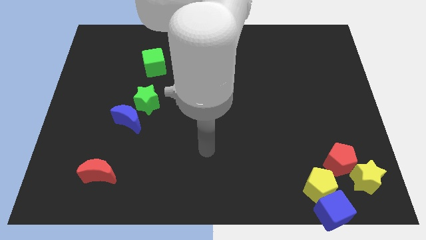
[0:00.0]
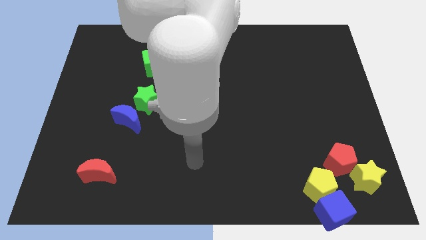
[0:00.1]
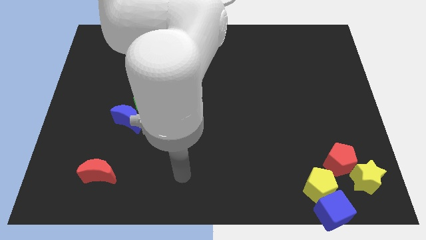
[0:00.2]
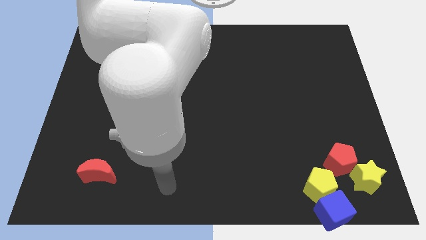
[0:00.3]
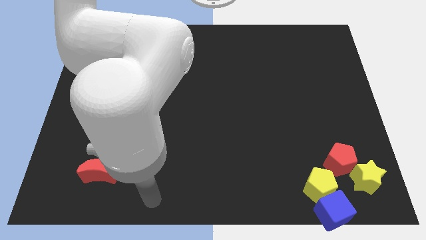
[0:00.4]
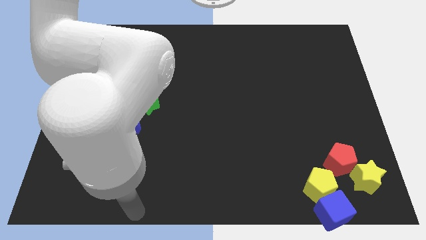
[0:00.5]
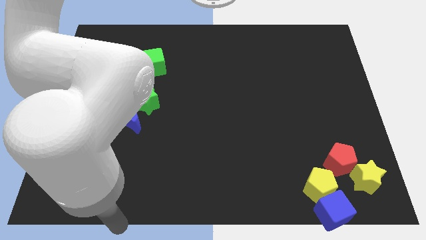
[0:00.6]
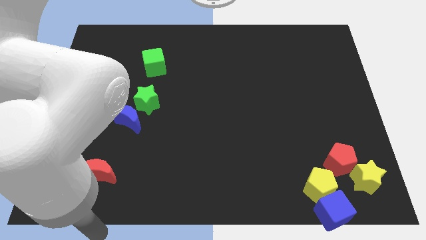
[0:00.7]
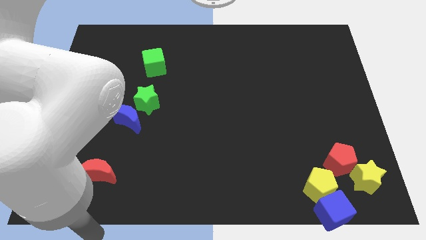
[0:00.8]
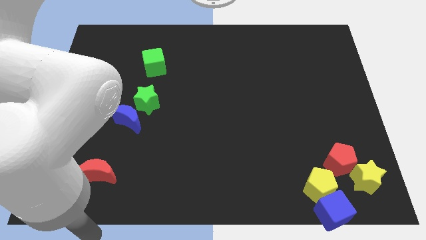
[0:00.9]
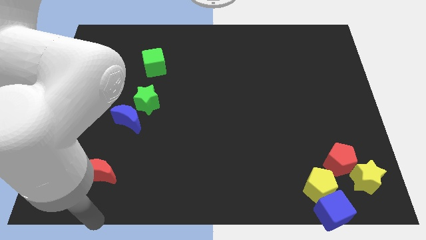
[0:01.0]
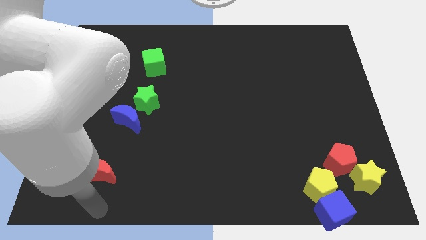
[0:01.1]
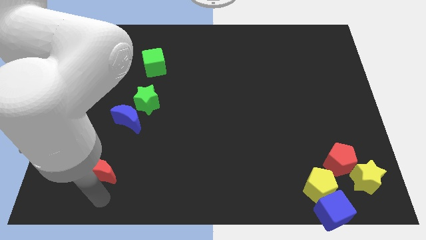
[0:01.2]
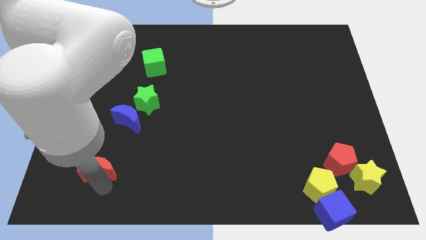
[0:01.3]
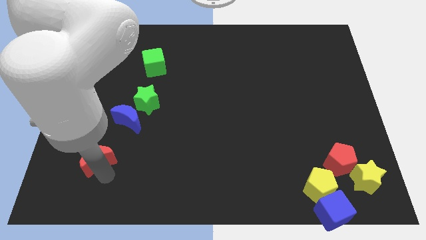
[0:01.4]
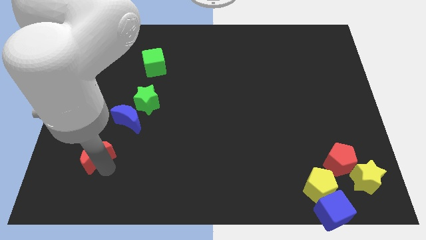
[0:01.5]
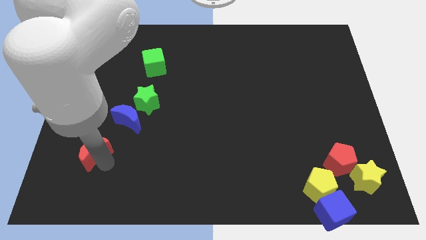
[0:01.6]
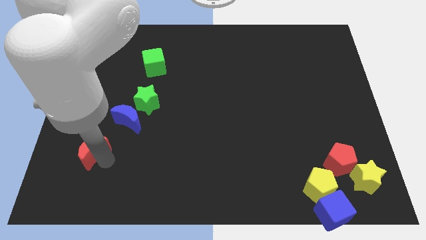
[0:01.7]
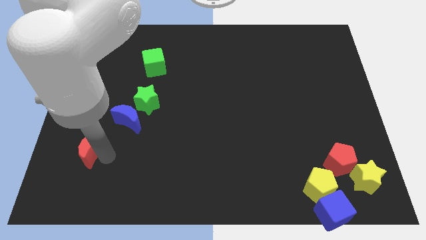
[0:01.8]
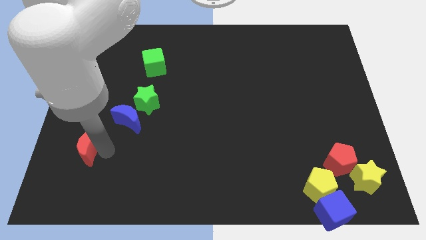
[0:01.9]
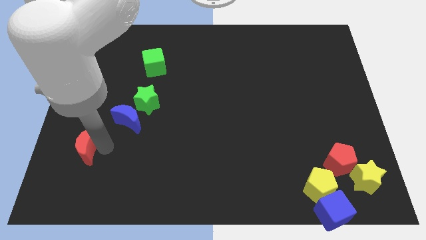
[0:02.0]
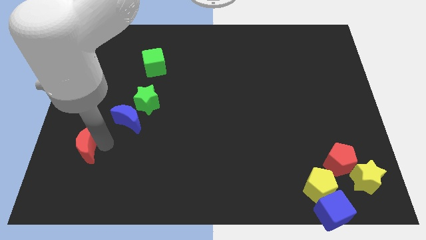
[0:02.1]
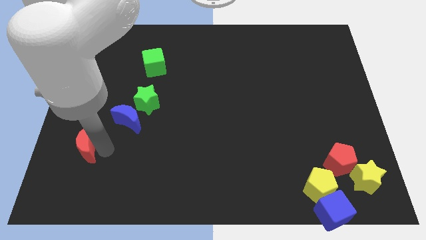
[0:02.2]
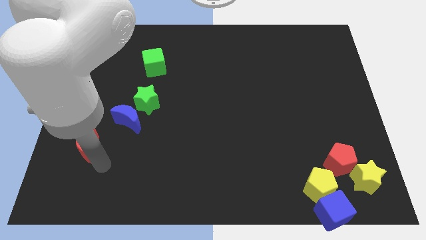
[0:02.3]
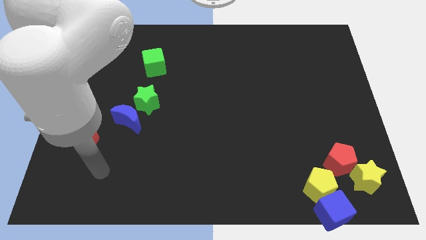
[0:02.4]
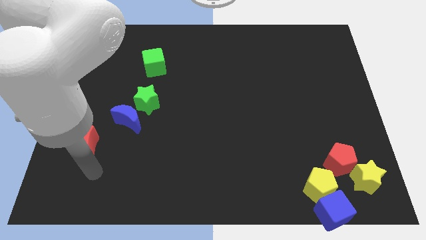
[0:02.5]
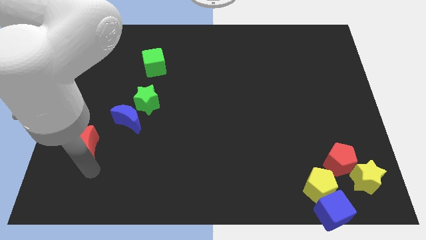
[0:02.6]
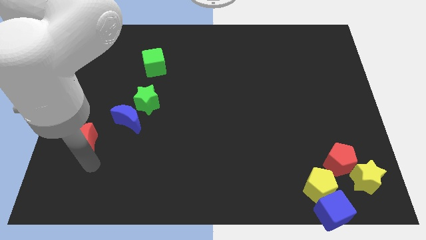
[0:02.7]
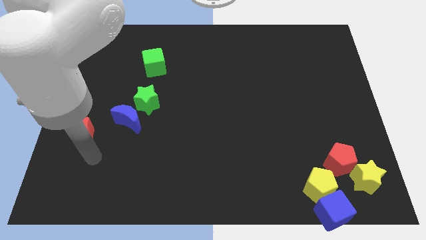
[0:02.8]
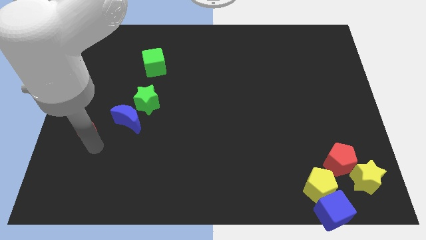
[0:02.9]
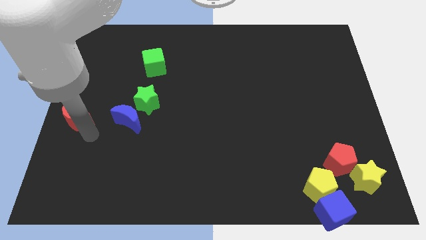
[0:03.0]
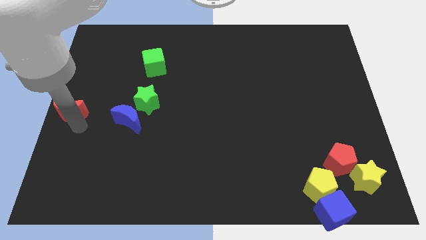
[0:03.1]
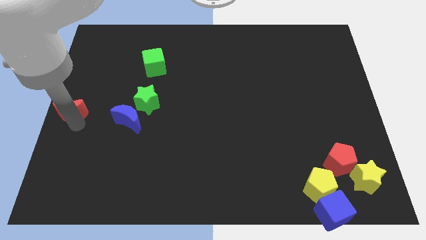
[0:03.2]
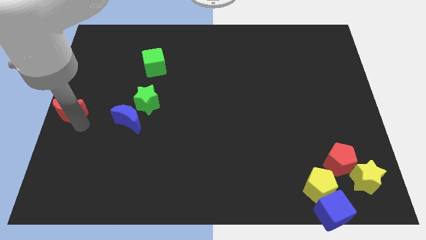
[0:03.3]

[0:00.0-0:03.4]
place the red moon left to the blue moon

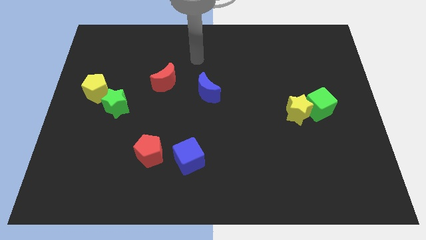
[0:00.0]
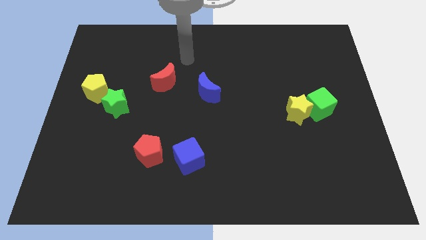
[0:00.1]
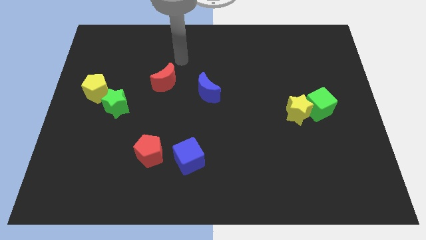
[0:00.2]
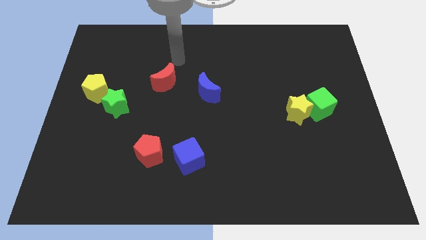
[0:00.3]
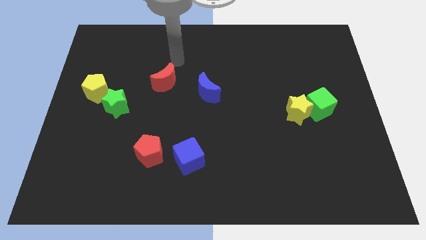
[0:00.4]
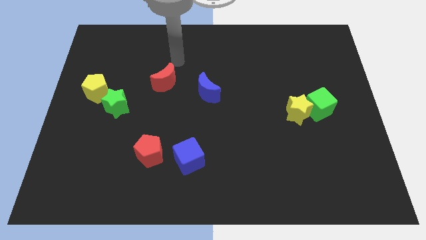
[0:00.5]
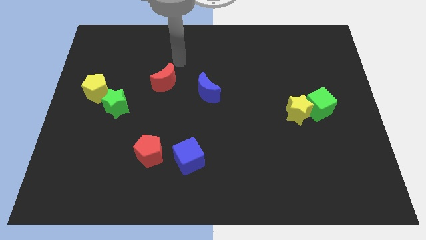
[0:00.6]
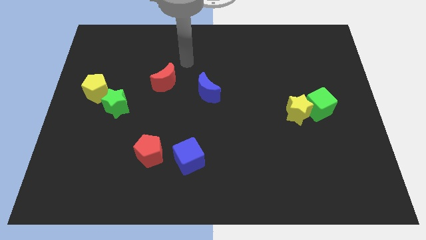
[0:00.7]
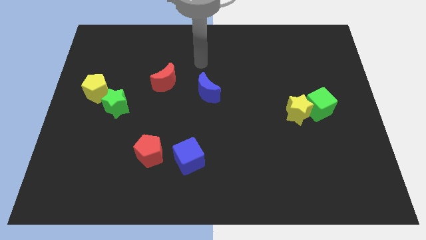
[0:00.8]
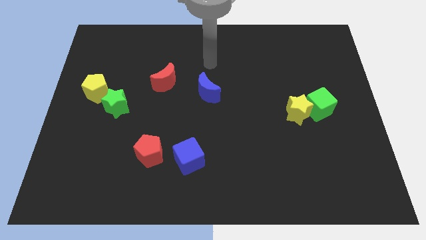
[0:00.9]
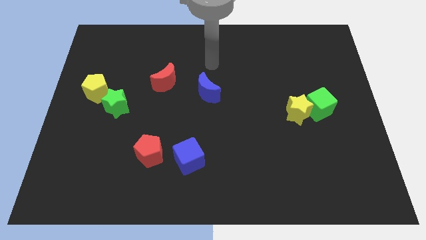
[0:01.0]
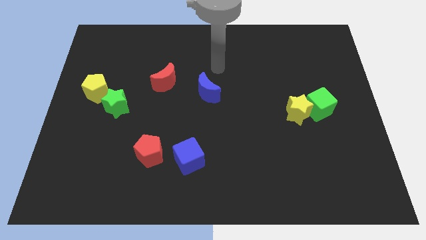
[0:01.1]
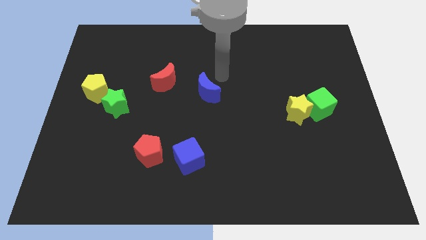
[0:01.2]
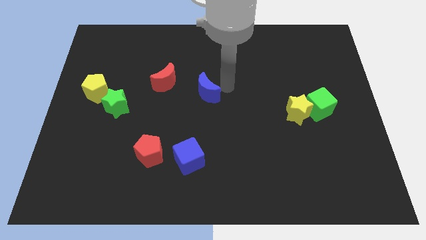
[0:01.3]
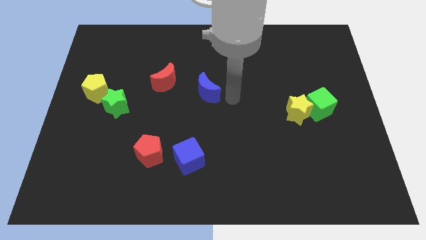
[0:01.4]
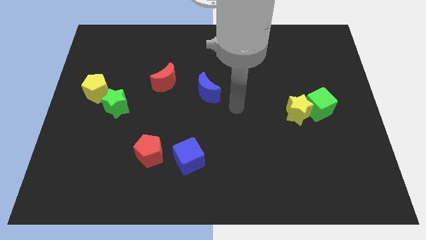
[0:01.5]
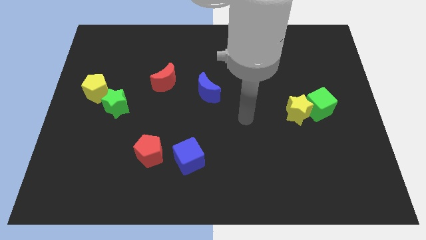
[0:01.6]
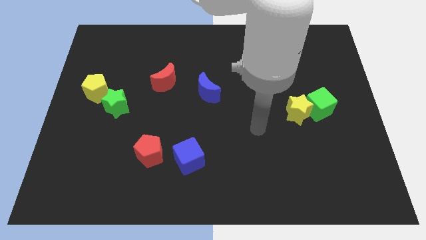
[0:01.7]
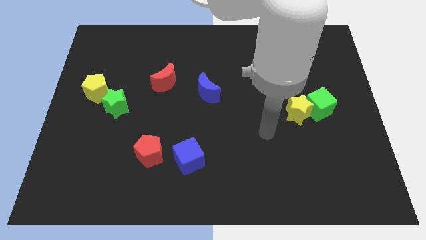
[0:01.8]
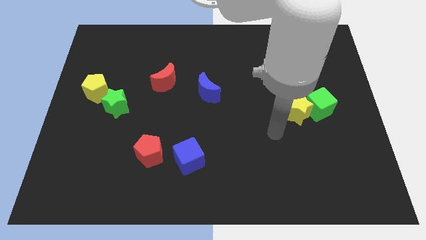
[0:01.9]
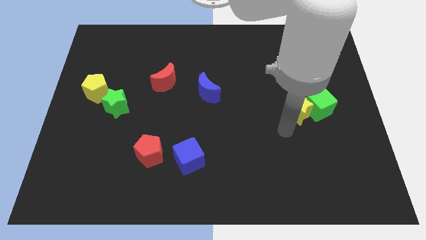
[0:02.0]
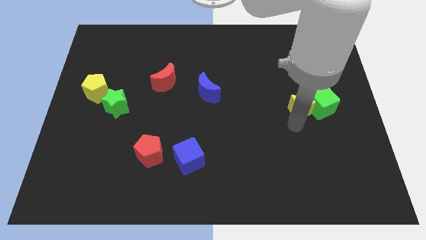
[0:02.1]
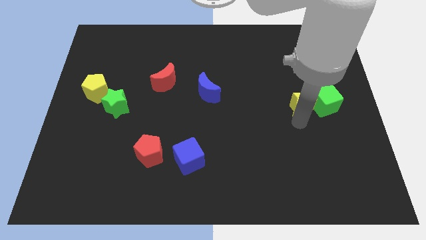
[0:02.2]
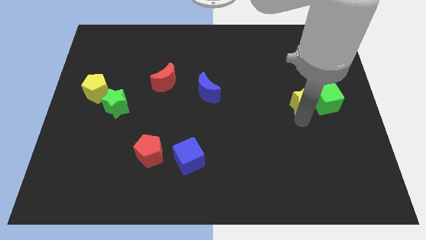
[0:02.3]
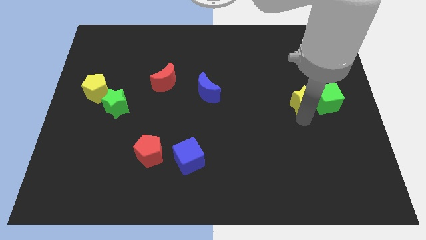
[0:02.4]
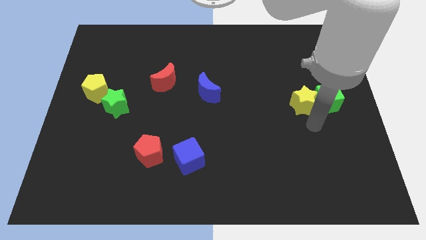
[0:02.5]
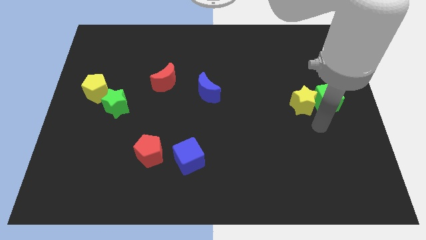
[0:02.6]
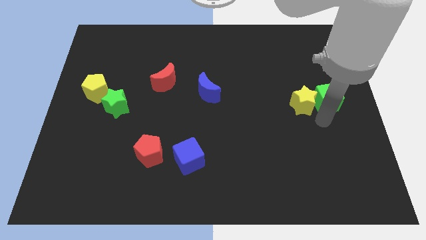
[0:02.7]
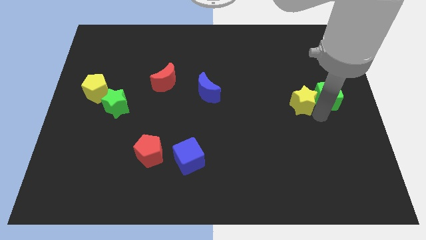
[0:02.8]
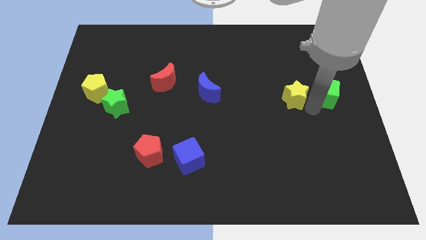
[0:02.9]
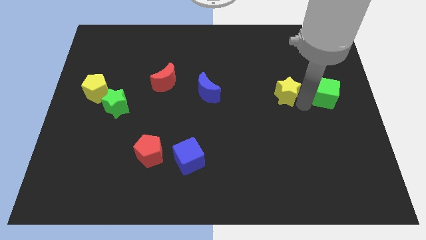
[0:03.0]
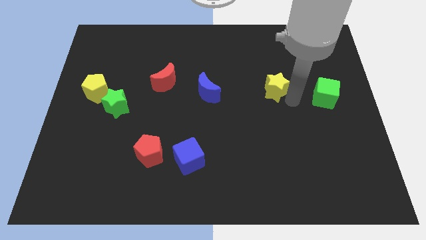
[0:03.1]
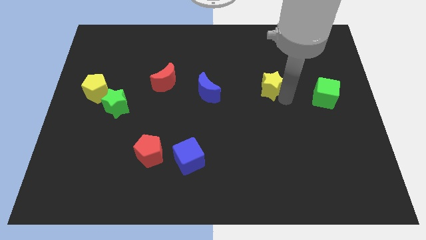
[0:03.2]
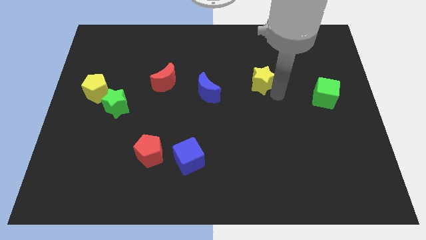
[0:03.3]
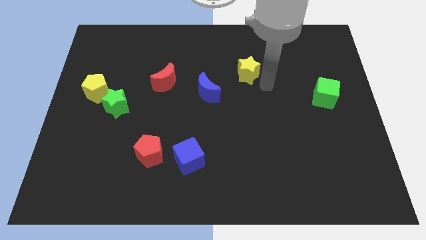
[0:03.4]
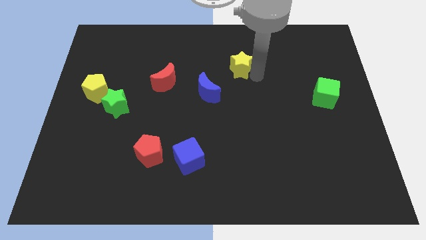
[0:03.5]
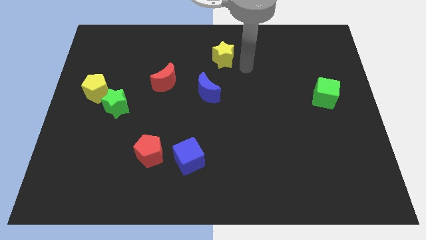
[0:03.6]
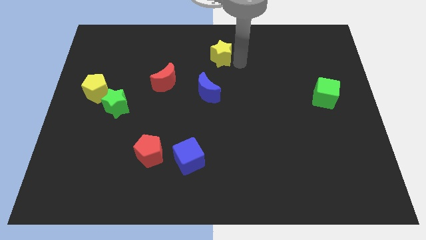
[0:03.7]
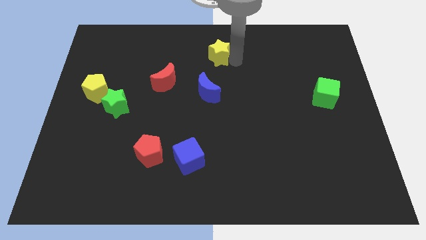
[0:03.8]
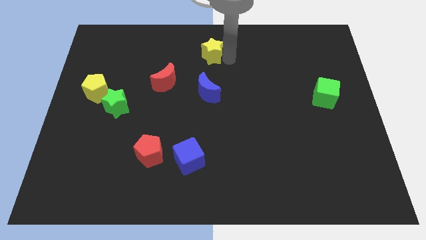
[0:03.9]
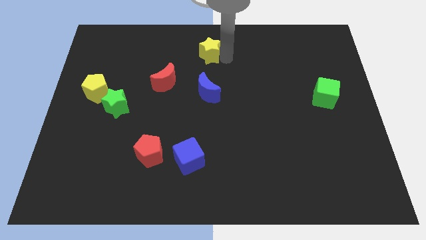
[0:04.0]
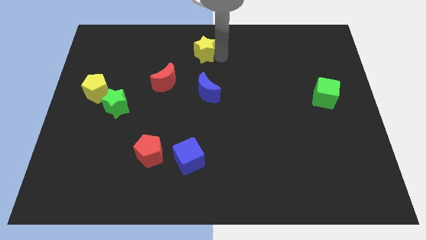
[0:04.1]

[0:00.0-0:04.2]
push the yellow star above the blue crescent

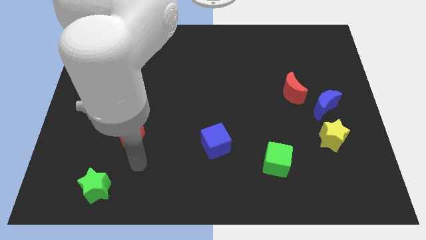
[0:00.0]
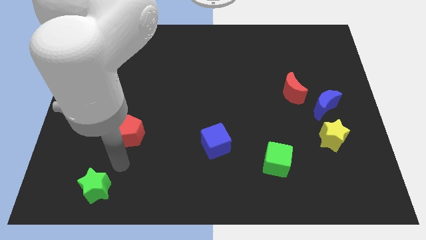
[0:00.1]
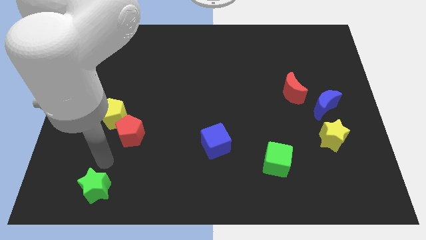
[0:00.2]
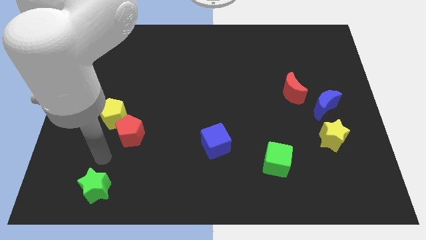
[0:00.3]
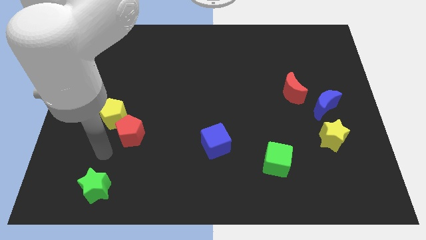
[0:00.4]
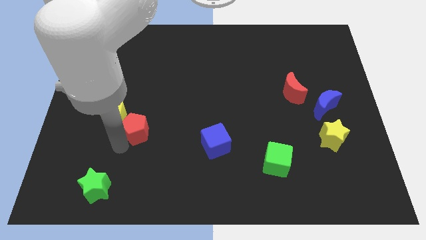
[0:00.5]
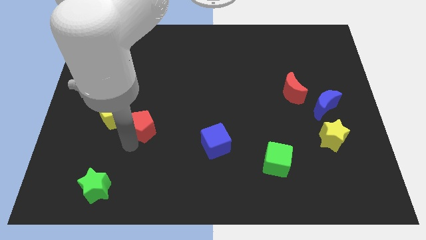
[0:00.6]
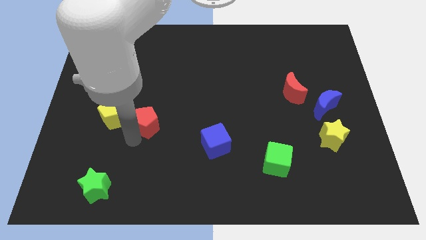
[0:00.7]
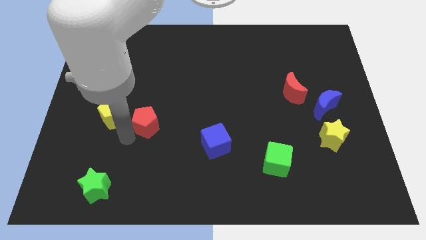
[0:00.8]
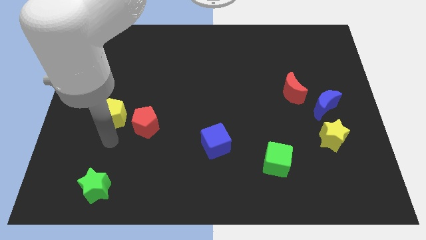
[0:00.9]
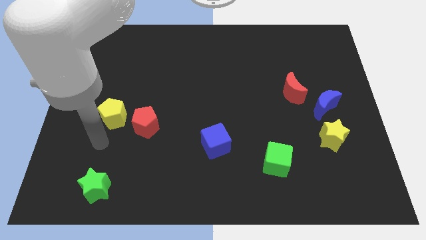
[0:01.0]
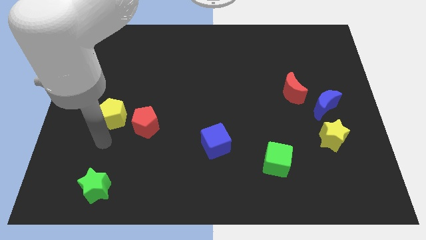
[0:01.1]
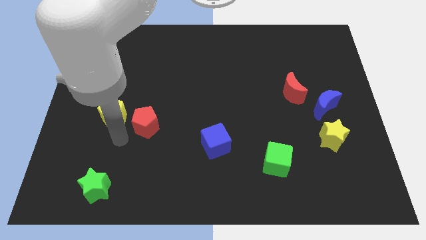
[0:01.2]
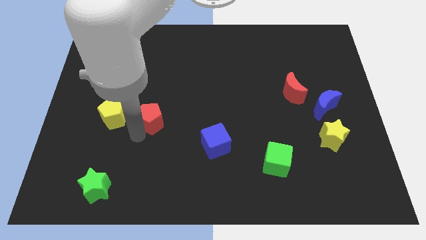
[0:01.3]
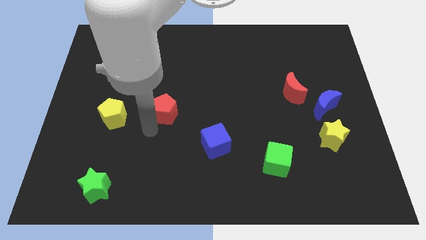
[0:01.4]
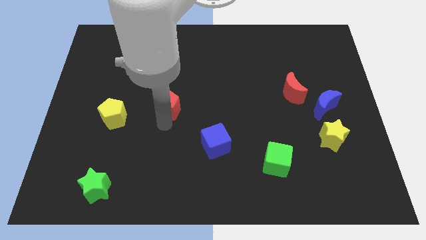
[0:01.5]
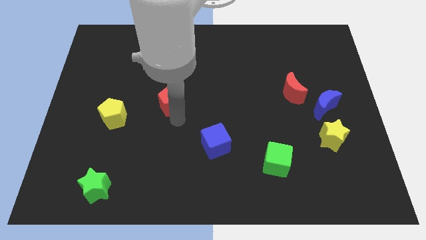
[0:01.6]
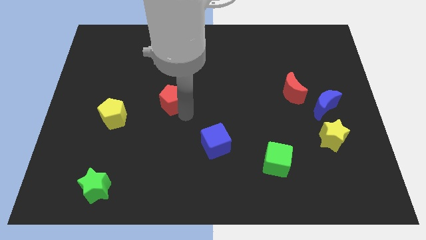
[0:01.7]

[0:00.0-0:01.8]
slide the red pentagon to right top
